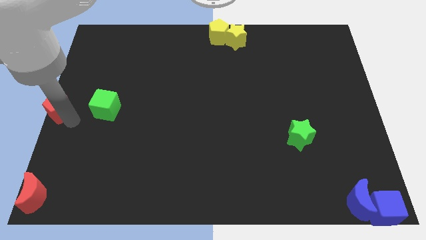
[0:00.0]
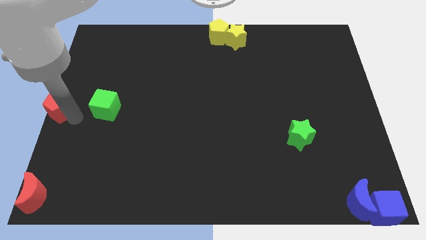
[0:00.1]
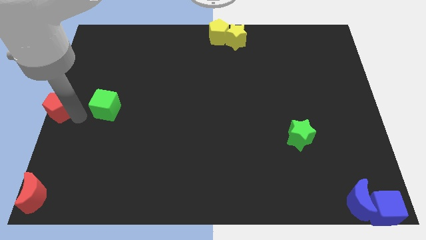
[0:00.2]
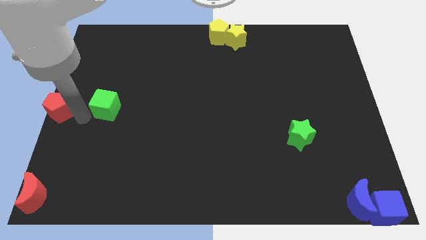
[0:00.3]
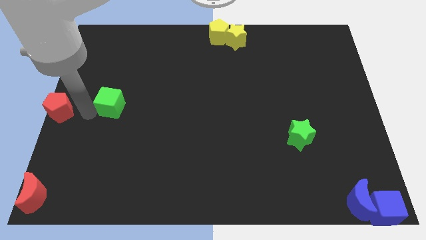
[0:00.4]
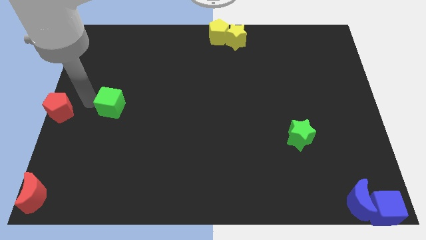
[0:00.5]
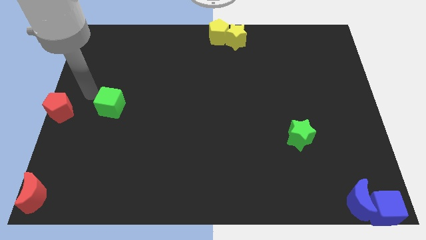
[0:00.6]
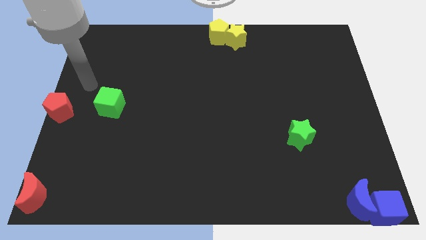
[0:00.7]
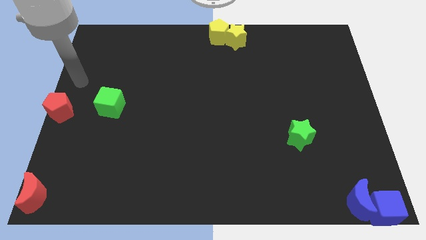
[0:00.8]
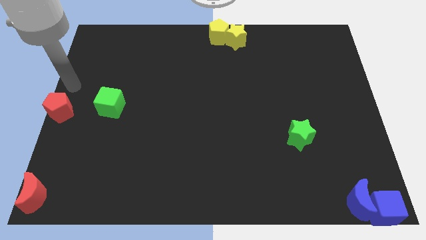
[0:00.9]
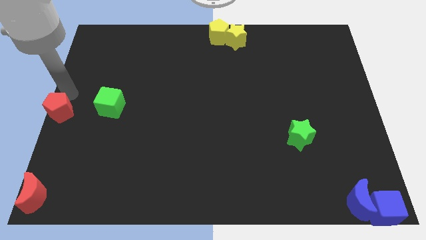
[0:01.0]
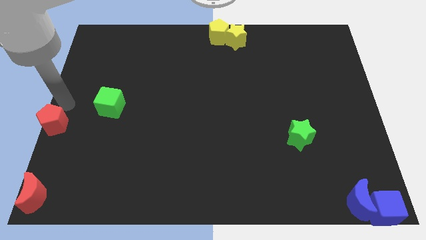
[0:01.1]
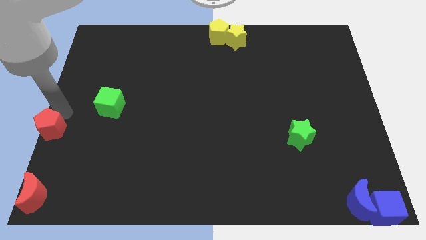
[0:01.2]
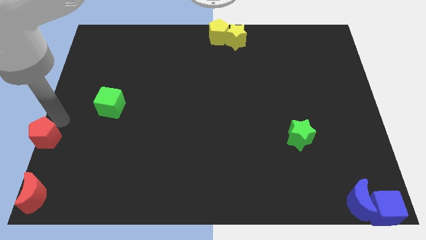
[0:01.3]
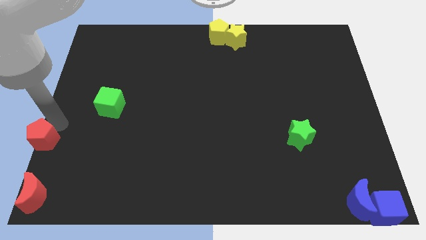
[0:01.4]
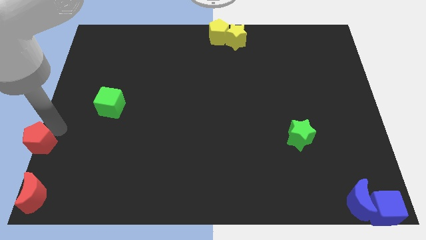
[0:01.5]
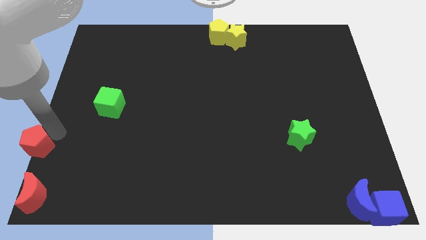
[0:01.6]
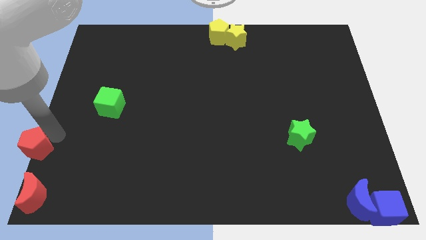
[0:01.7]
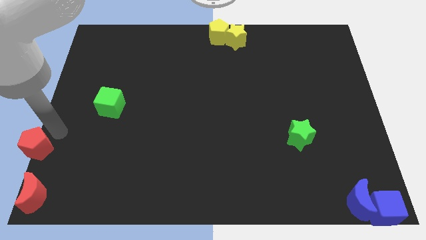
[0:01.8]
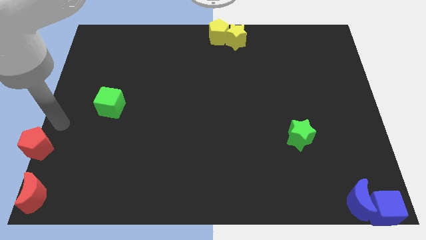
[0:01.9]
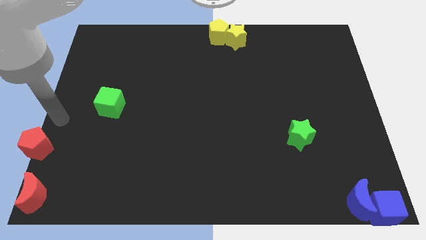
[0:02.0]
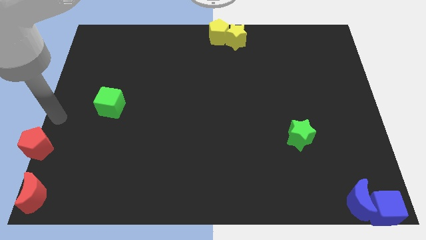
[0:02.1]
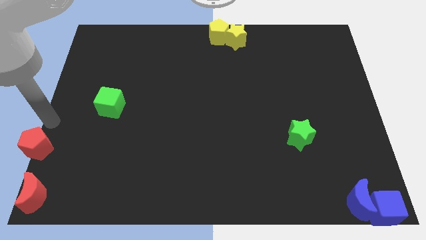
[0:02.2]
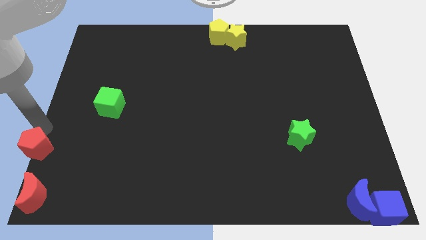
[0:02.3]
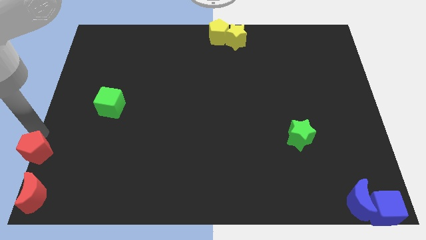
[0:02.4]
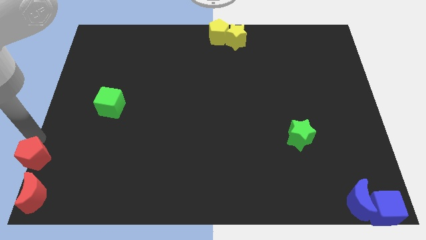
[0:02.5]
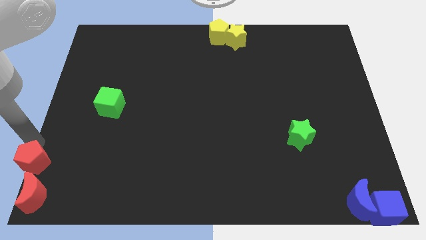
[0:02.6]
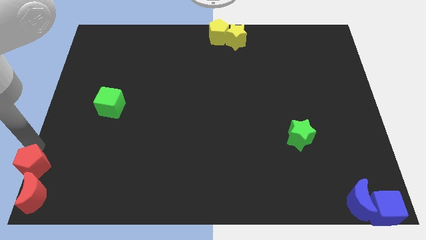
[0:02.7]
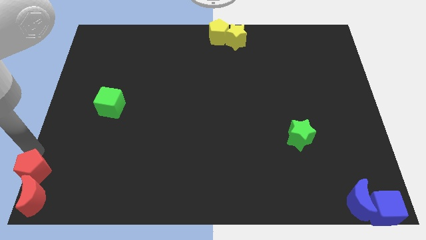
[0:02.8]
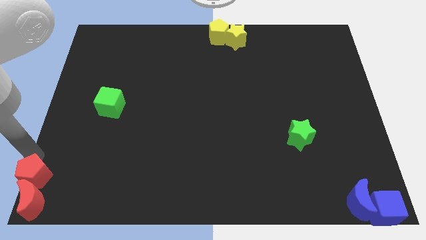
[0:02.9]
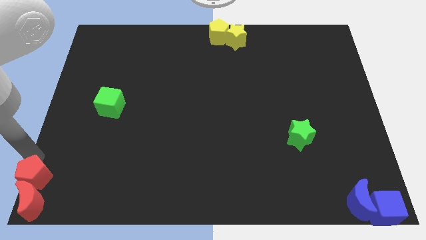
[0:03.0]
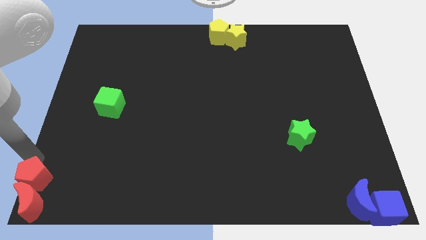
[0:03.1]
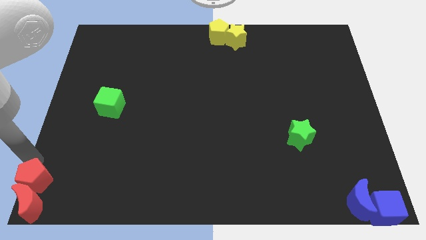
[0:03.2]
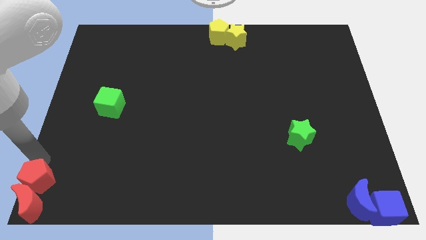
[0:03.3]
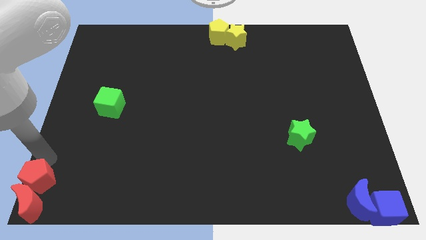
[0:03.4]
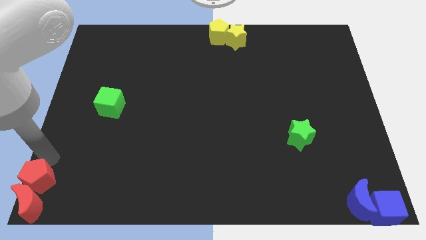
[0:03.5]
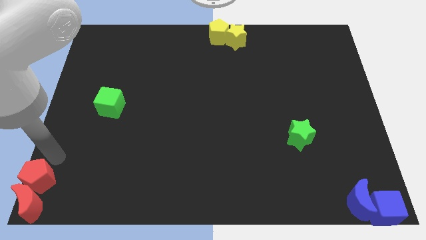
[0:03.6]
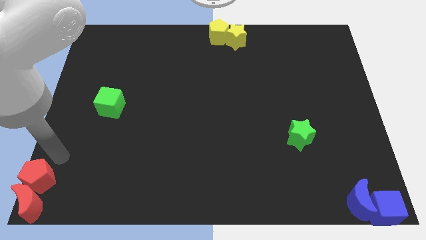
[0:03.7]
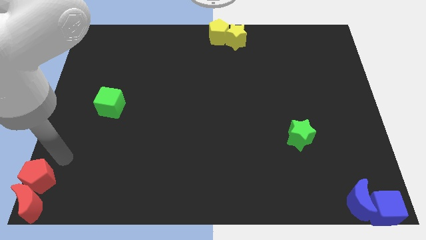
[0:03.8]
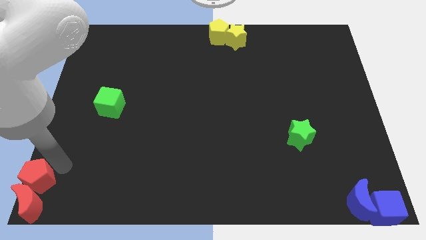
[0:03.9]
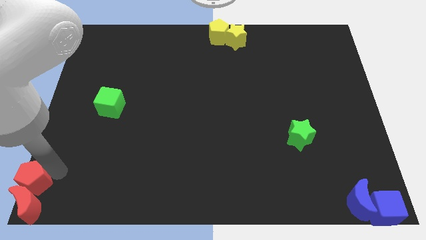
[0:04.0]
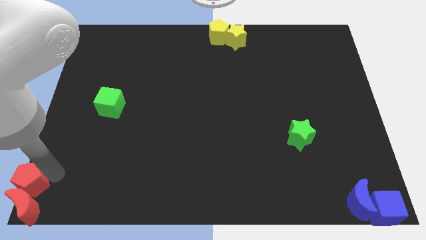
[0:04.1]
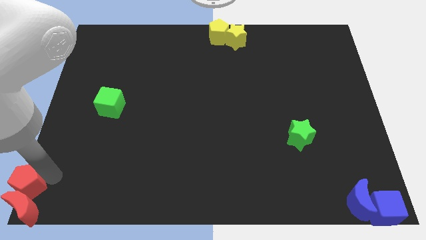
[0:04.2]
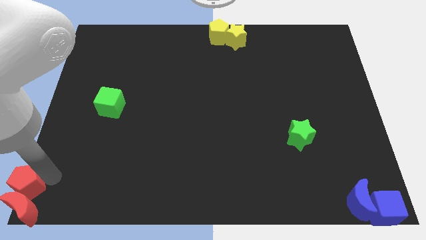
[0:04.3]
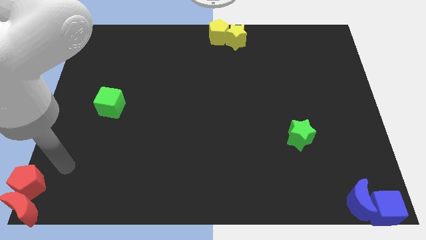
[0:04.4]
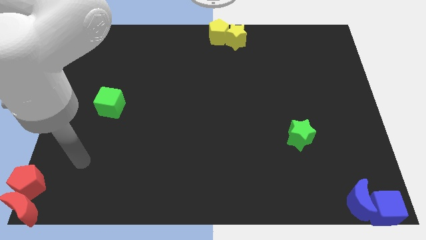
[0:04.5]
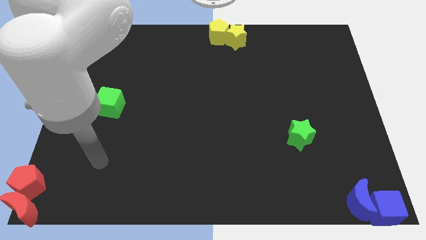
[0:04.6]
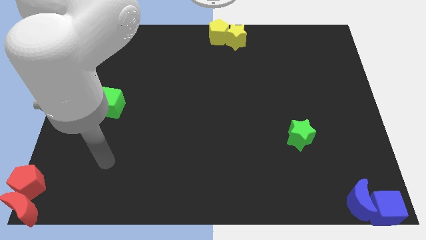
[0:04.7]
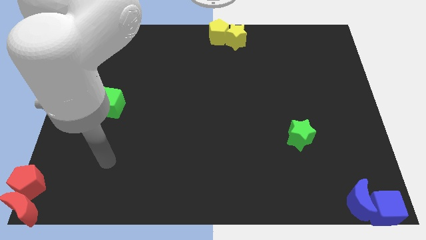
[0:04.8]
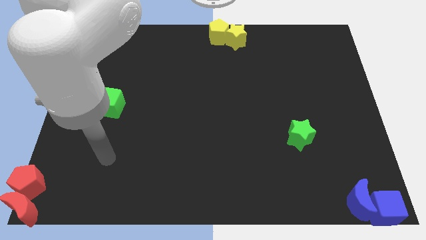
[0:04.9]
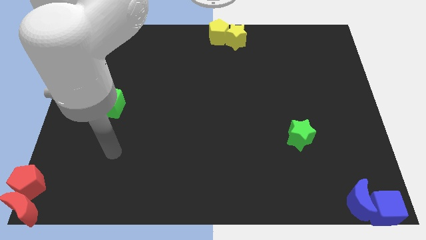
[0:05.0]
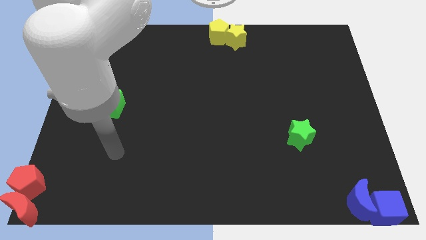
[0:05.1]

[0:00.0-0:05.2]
place the red pentagon into the red moon

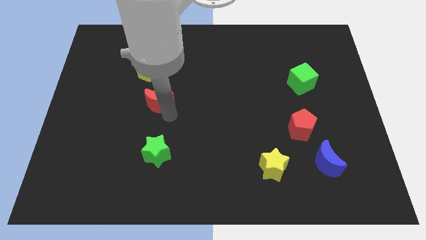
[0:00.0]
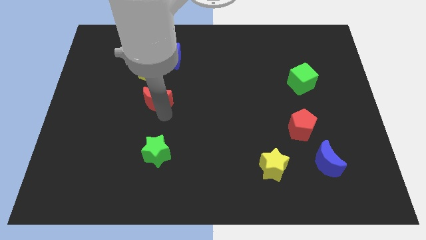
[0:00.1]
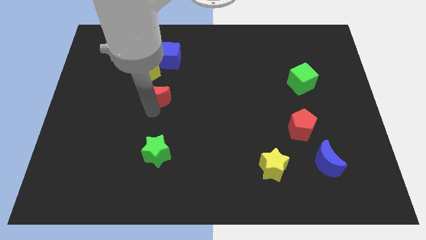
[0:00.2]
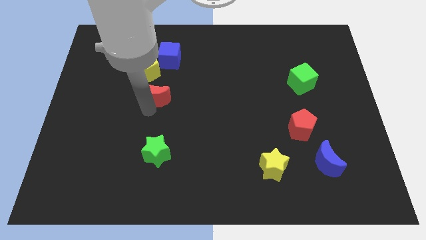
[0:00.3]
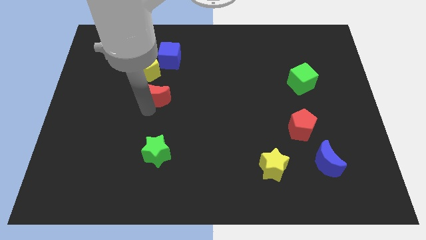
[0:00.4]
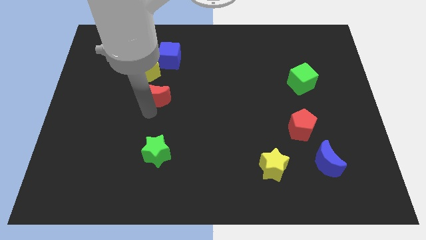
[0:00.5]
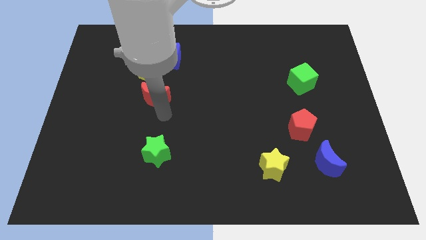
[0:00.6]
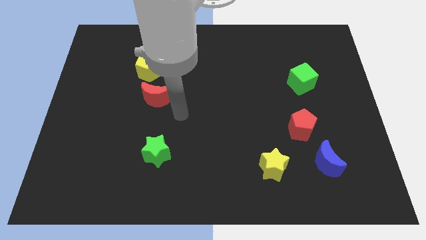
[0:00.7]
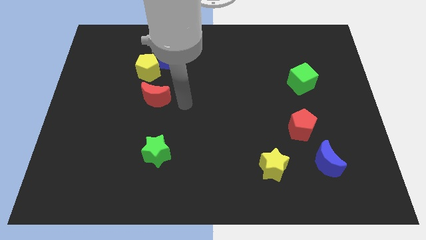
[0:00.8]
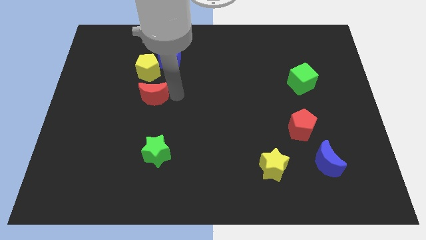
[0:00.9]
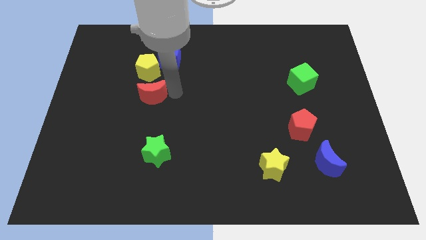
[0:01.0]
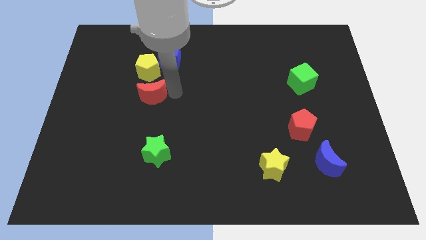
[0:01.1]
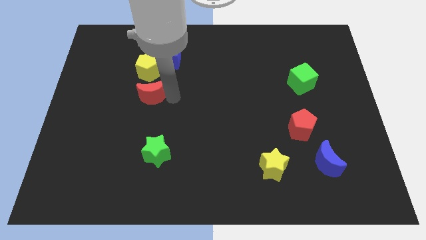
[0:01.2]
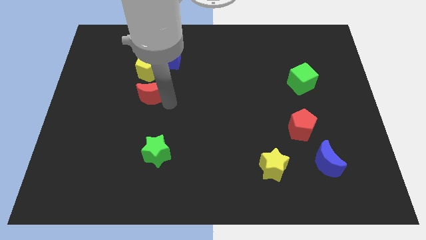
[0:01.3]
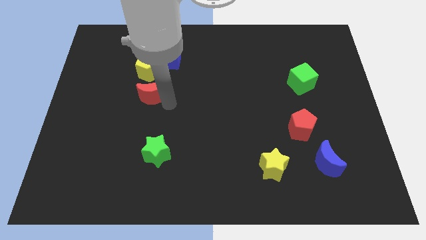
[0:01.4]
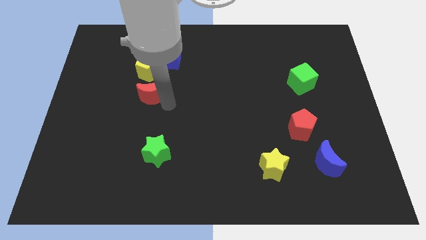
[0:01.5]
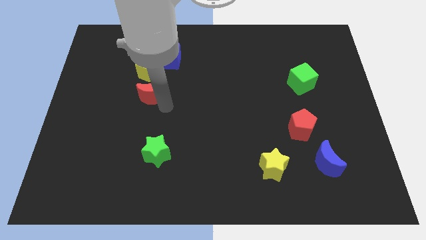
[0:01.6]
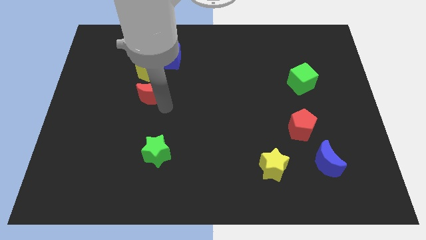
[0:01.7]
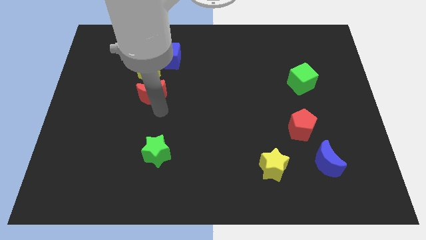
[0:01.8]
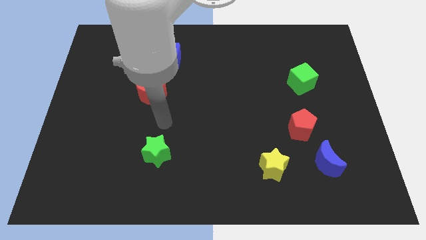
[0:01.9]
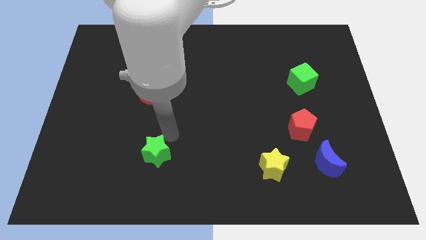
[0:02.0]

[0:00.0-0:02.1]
move the red moon close to the yellow pentagon

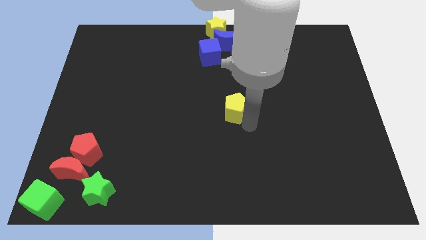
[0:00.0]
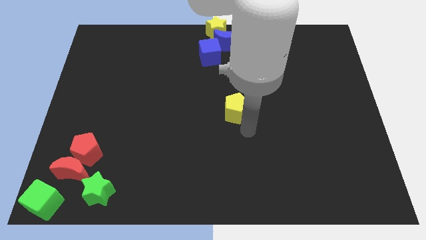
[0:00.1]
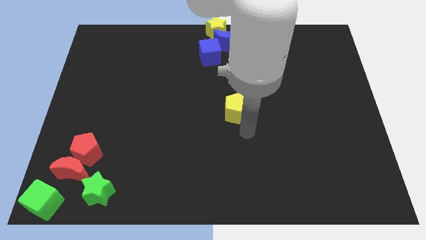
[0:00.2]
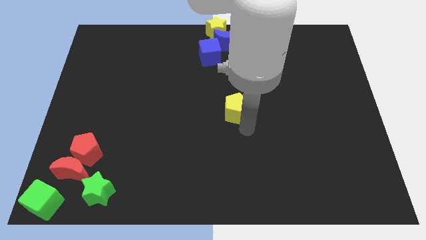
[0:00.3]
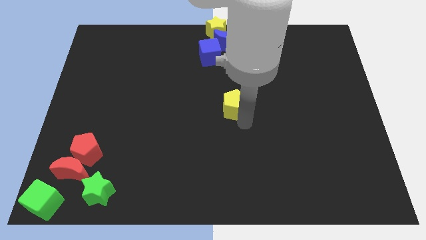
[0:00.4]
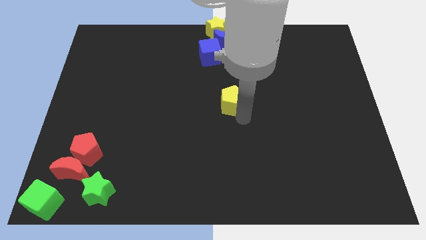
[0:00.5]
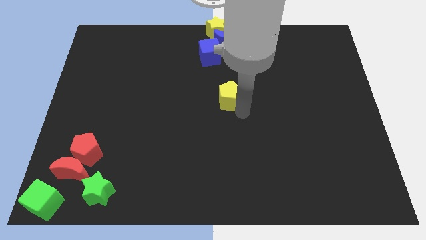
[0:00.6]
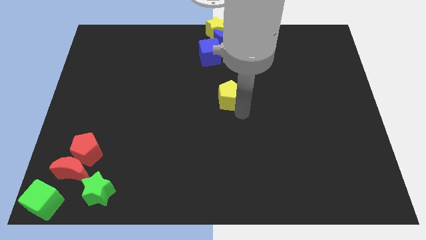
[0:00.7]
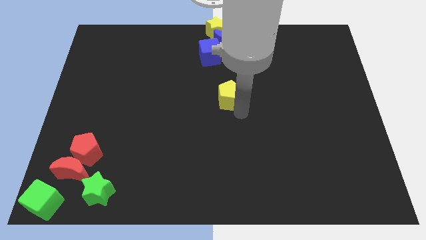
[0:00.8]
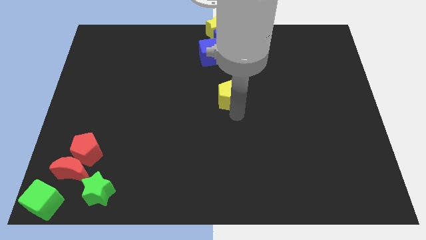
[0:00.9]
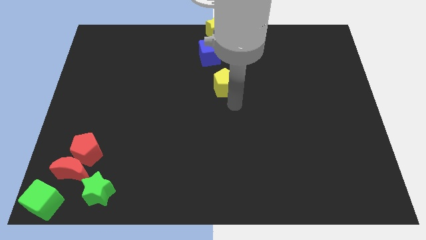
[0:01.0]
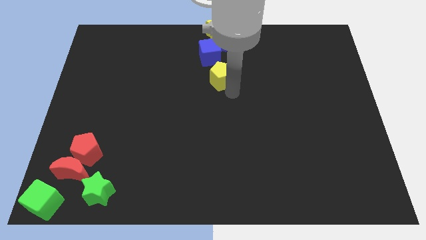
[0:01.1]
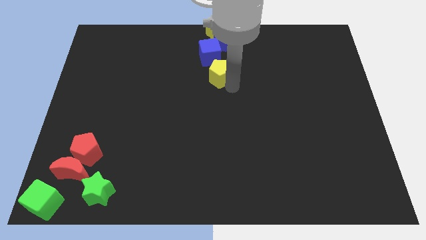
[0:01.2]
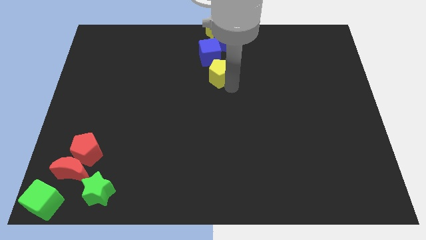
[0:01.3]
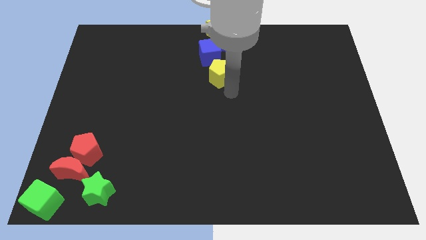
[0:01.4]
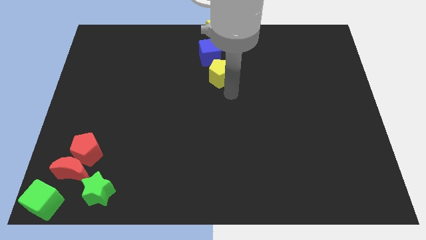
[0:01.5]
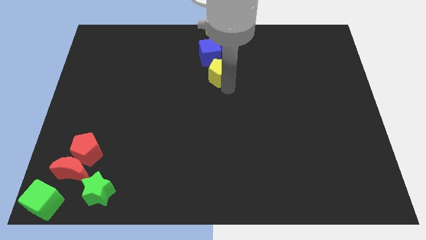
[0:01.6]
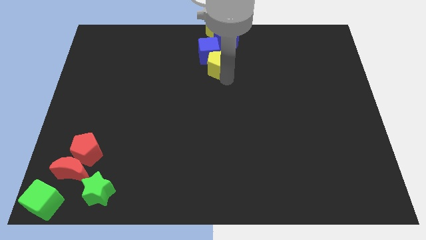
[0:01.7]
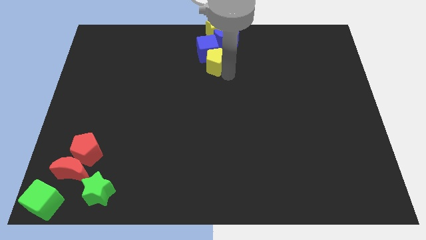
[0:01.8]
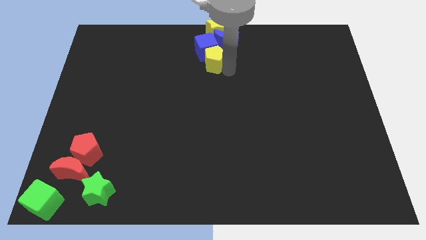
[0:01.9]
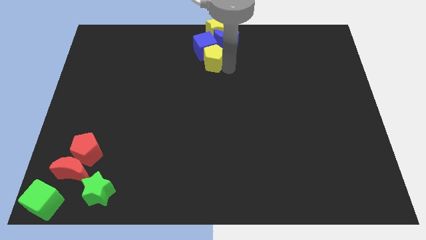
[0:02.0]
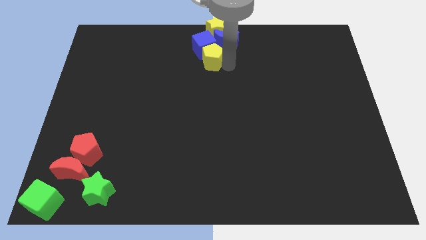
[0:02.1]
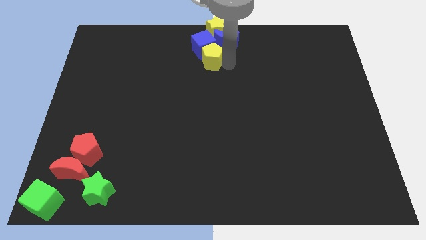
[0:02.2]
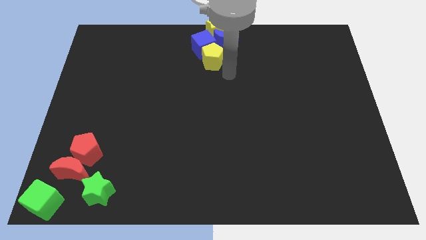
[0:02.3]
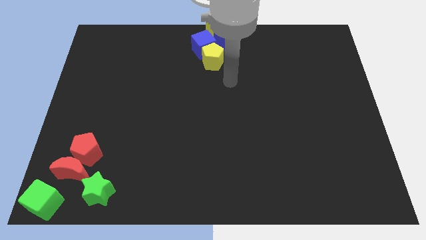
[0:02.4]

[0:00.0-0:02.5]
push the yellow pentagon into the blue moon
